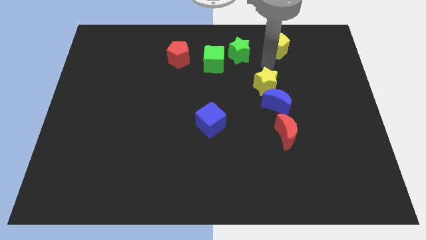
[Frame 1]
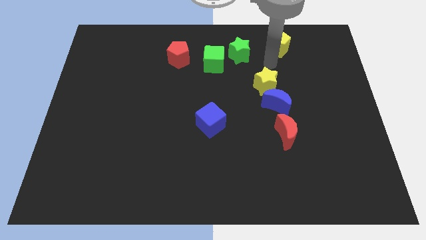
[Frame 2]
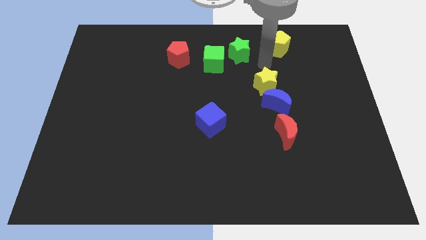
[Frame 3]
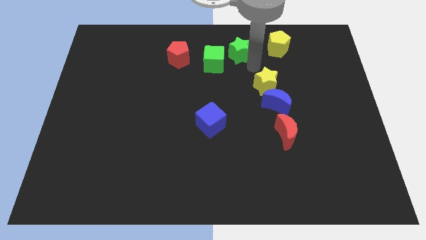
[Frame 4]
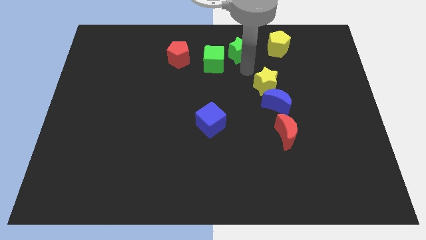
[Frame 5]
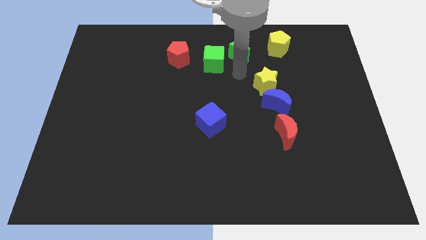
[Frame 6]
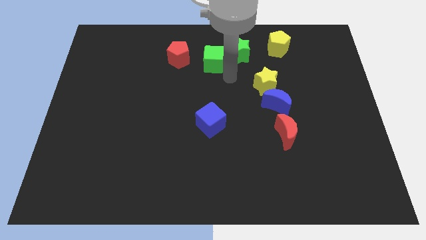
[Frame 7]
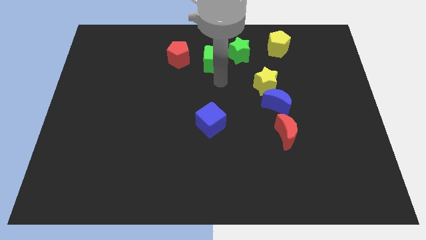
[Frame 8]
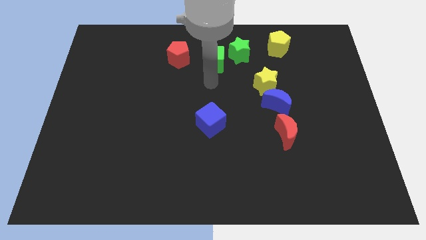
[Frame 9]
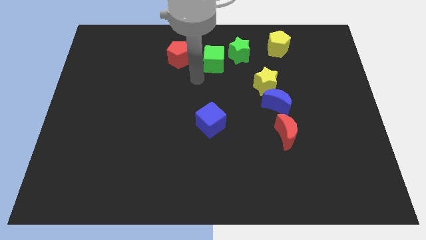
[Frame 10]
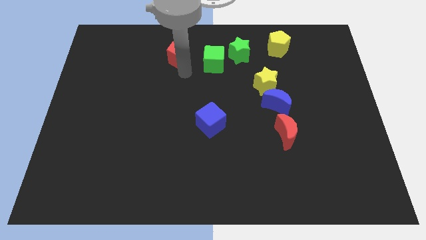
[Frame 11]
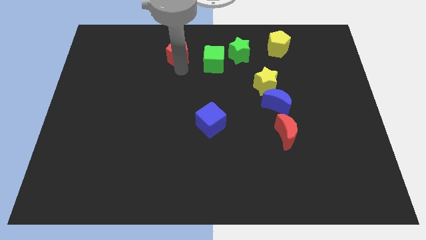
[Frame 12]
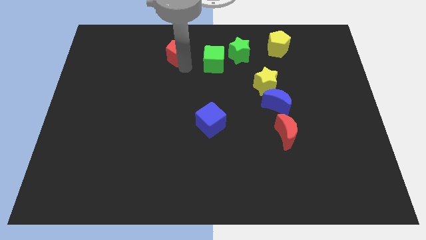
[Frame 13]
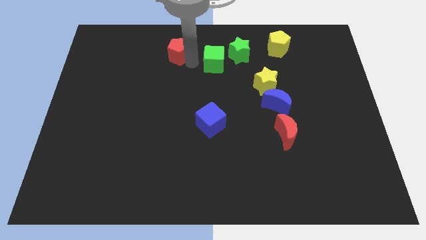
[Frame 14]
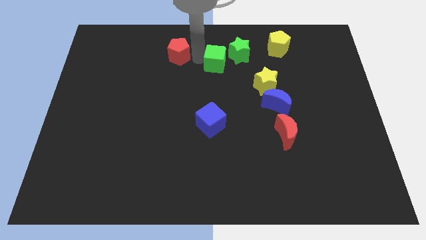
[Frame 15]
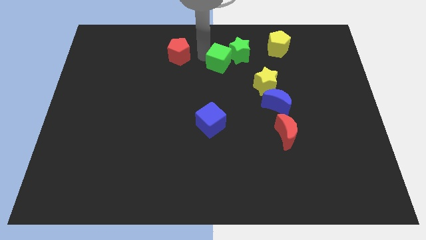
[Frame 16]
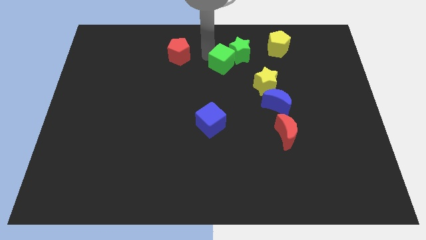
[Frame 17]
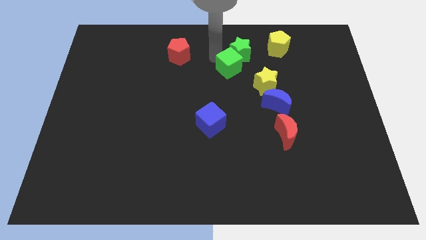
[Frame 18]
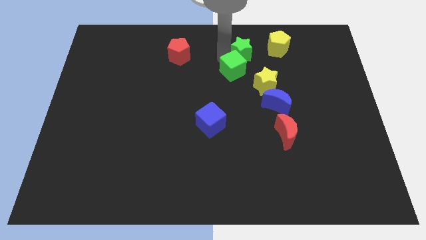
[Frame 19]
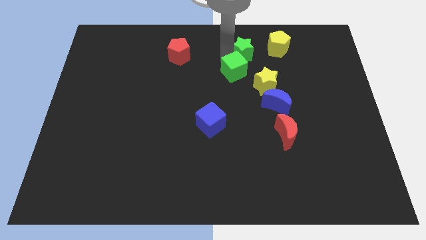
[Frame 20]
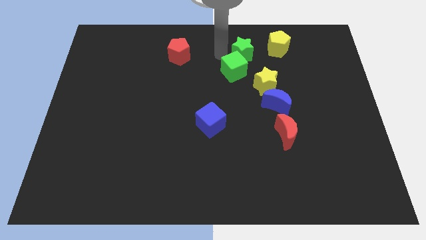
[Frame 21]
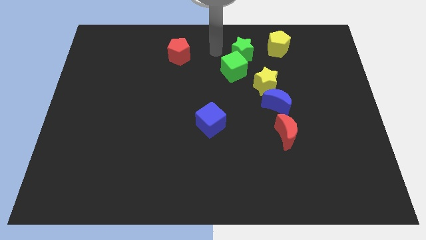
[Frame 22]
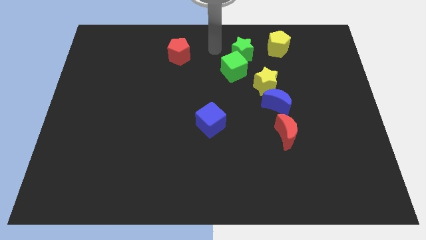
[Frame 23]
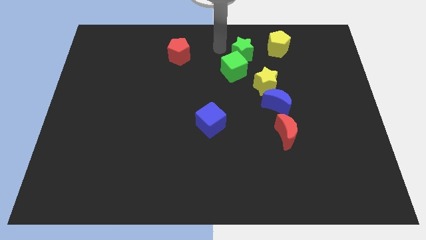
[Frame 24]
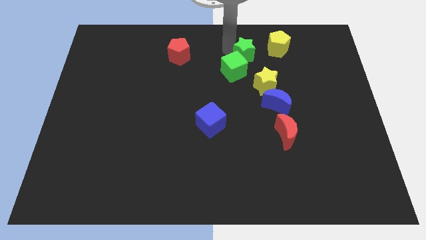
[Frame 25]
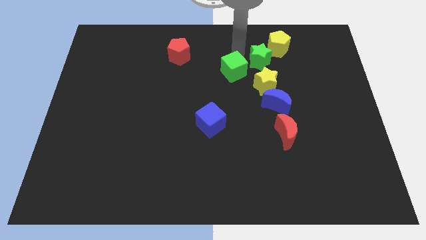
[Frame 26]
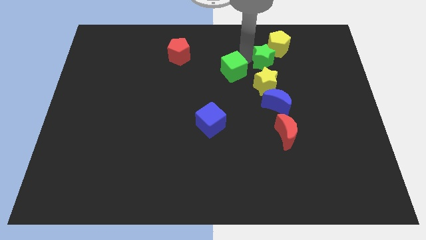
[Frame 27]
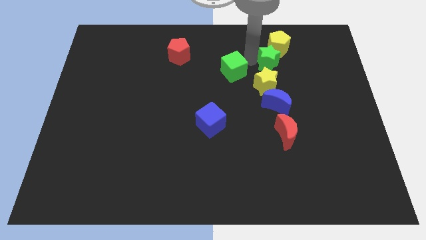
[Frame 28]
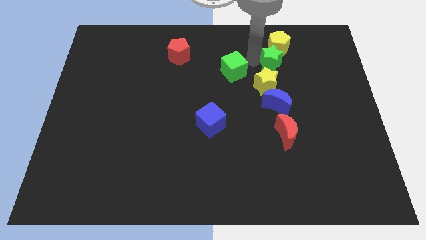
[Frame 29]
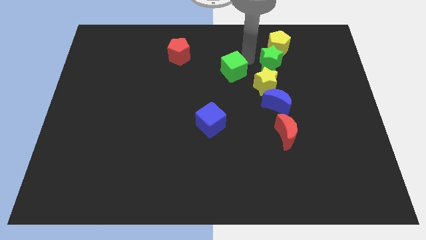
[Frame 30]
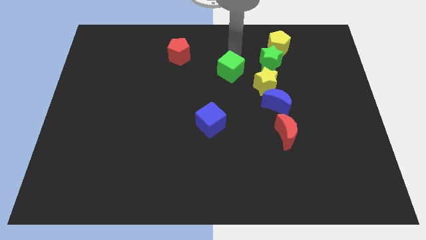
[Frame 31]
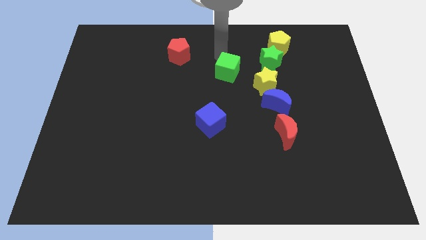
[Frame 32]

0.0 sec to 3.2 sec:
place the green star below the yellow pentagon

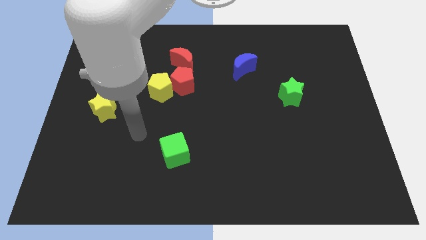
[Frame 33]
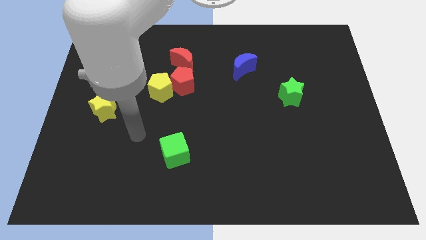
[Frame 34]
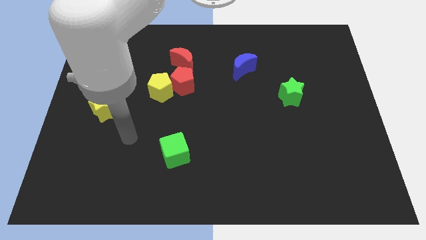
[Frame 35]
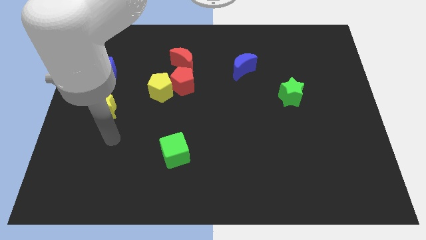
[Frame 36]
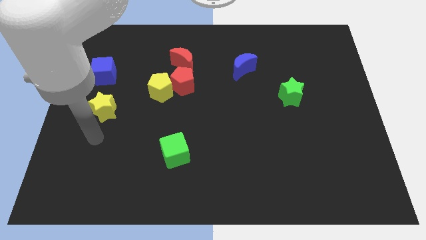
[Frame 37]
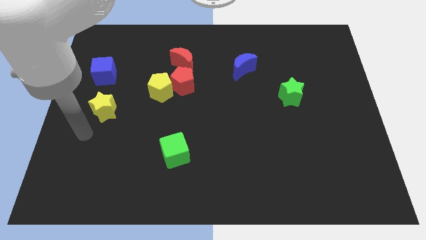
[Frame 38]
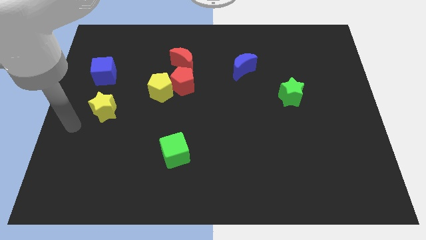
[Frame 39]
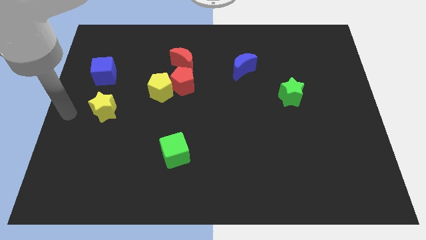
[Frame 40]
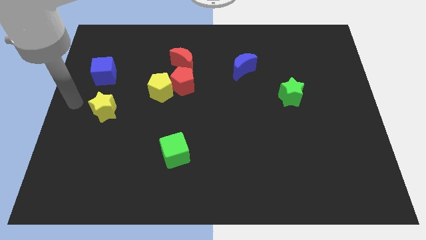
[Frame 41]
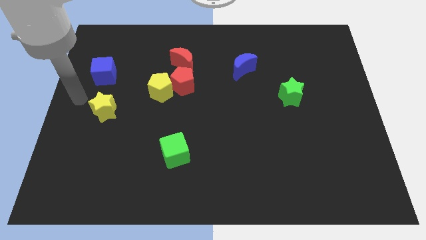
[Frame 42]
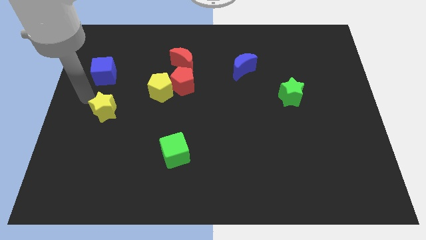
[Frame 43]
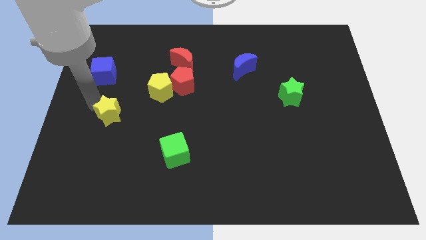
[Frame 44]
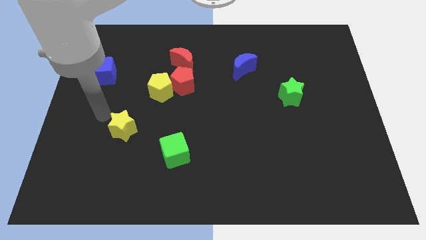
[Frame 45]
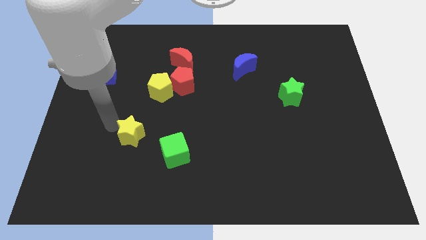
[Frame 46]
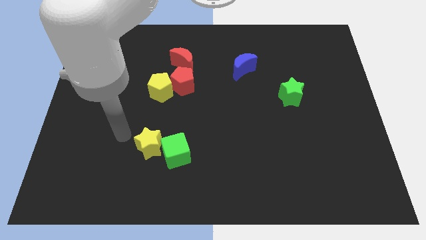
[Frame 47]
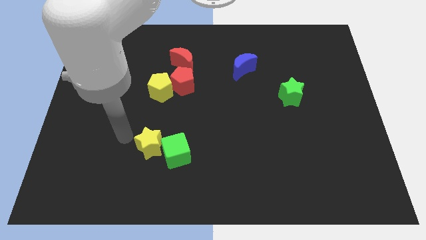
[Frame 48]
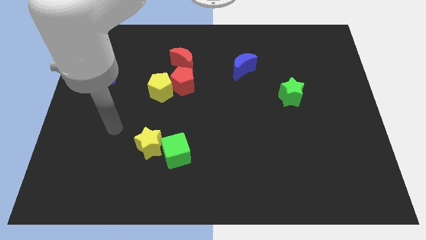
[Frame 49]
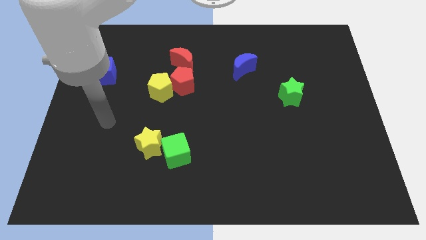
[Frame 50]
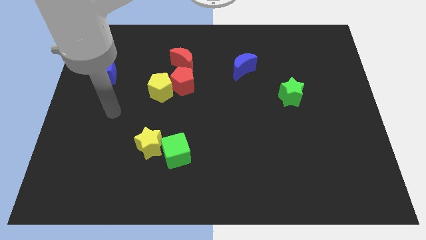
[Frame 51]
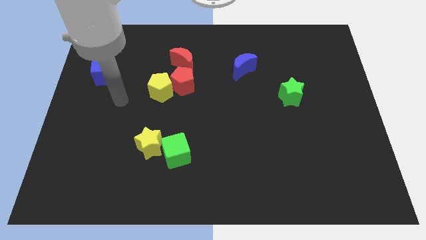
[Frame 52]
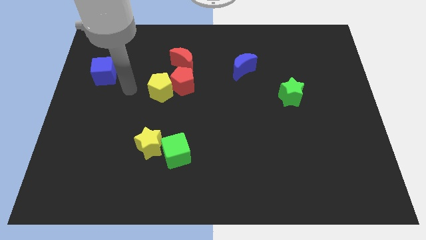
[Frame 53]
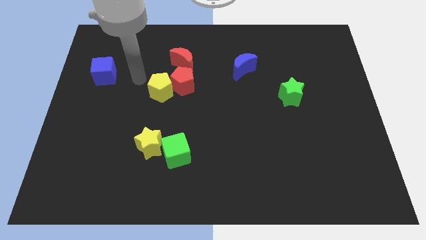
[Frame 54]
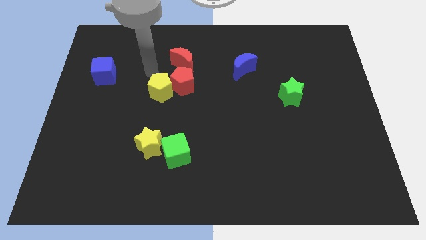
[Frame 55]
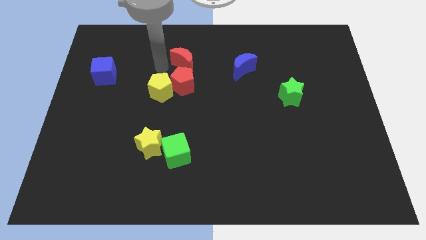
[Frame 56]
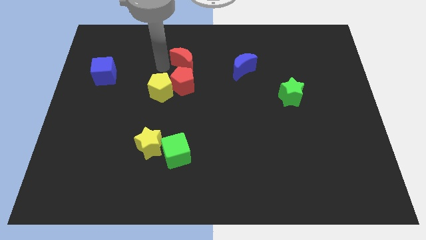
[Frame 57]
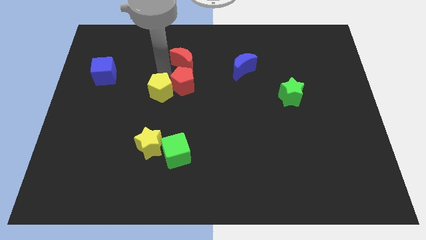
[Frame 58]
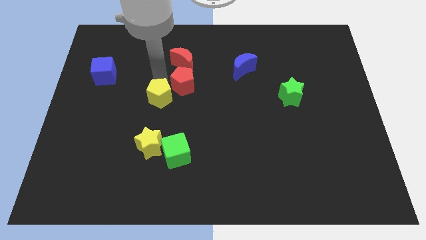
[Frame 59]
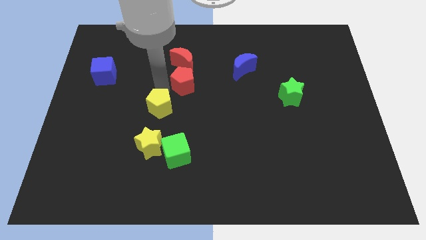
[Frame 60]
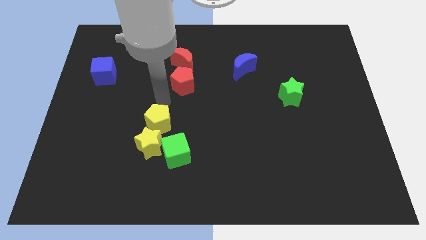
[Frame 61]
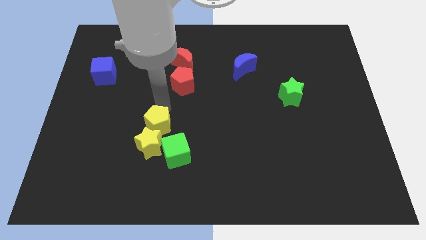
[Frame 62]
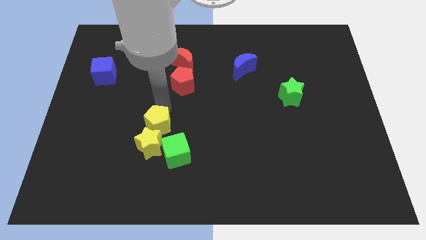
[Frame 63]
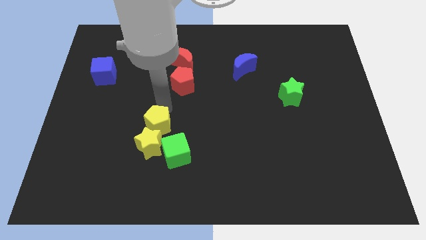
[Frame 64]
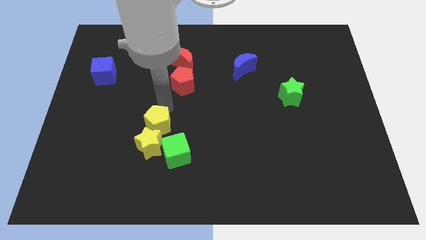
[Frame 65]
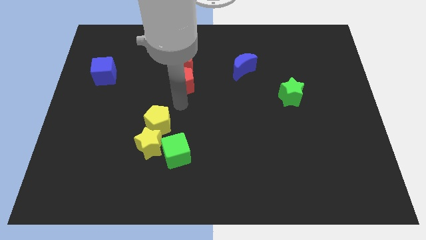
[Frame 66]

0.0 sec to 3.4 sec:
push yellow pentagon towards yellow star

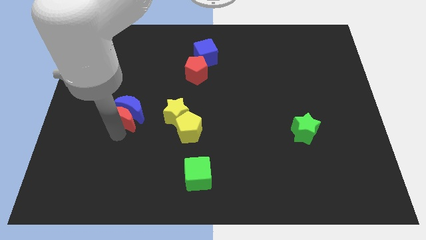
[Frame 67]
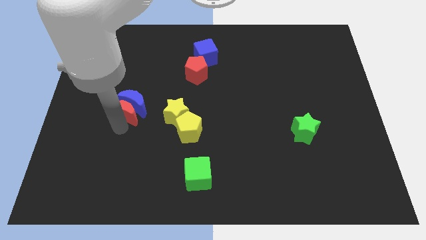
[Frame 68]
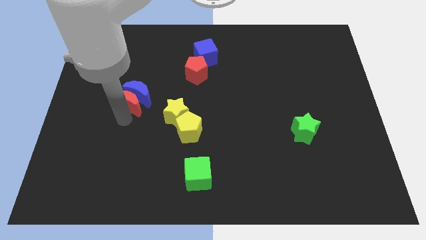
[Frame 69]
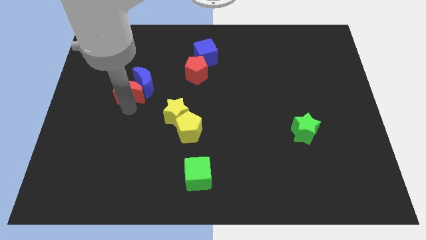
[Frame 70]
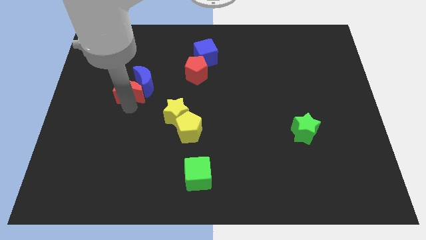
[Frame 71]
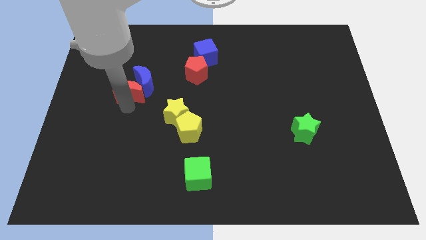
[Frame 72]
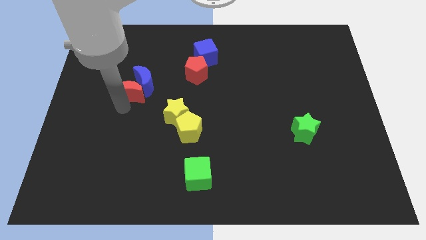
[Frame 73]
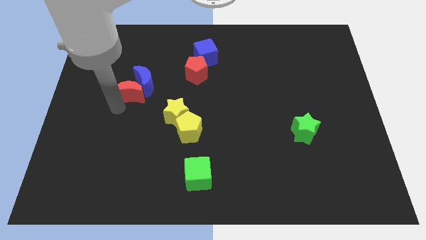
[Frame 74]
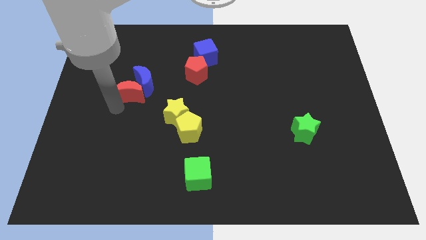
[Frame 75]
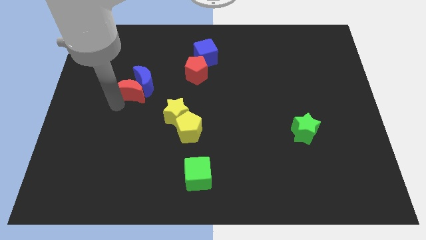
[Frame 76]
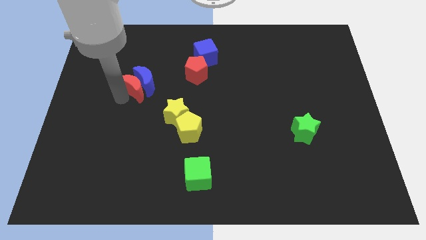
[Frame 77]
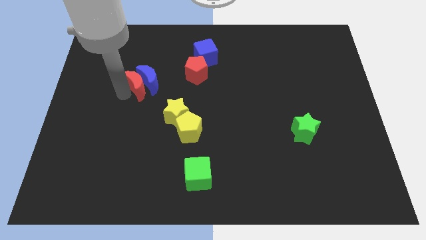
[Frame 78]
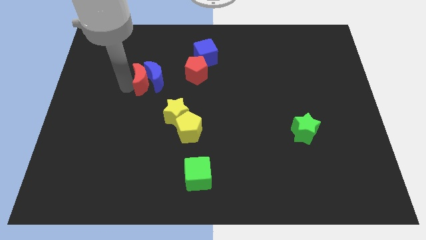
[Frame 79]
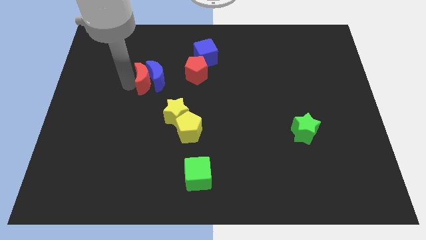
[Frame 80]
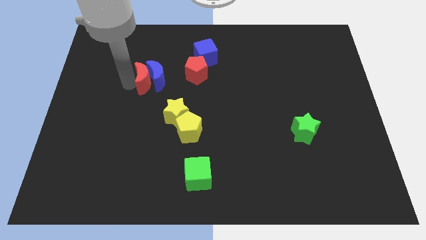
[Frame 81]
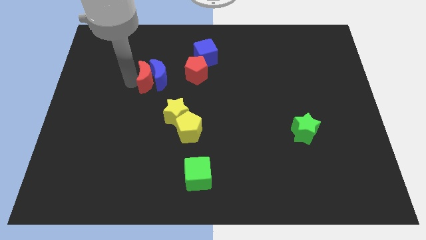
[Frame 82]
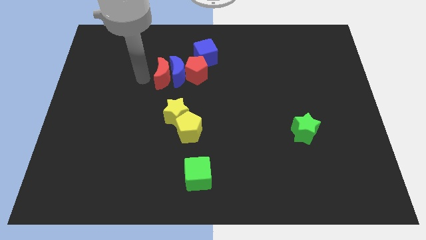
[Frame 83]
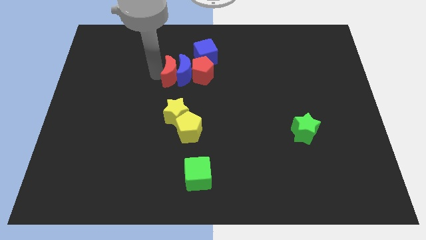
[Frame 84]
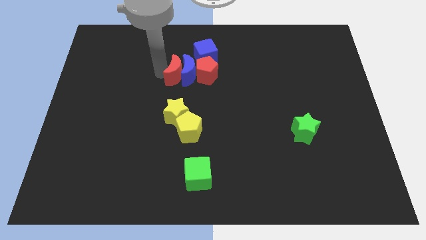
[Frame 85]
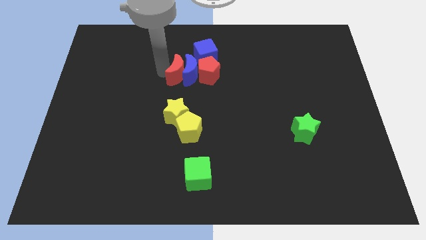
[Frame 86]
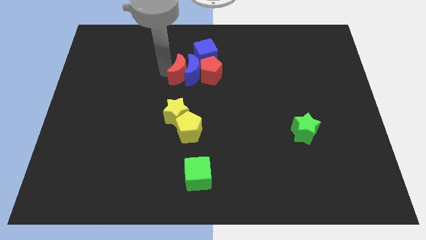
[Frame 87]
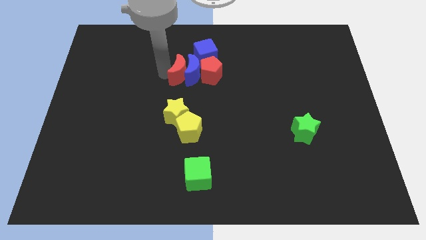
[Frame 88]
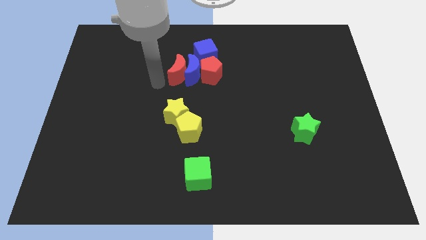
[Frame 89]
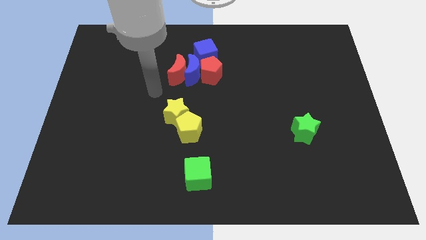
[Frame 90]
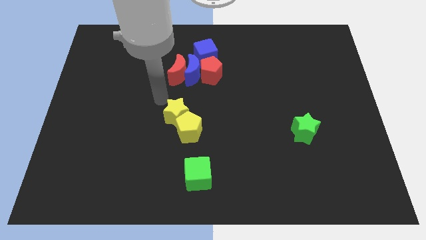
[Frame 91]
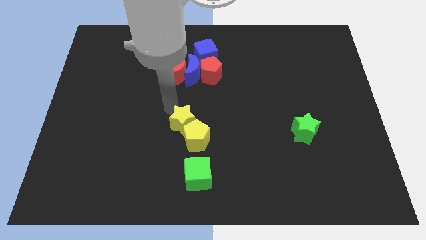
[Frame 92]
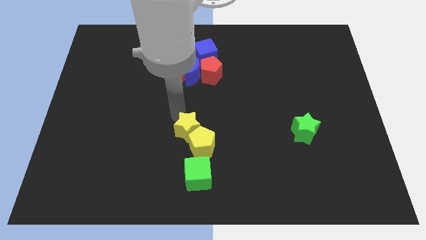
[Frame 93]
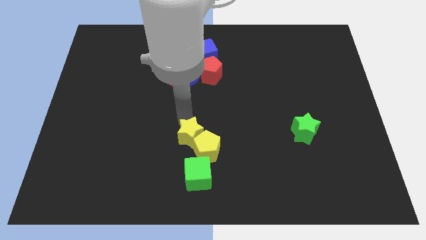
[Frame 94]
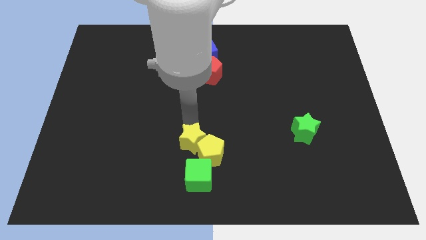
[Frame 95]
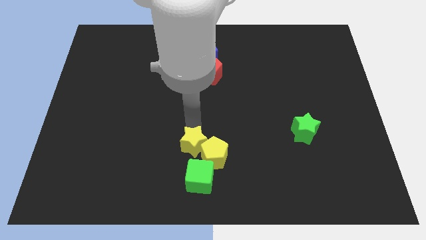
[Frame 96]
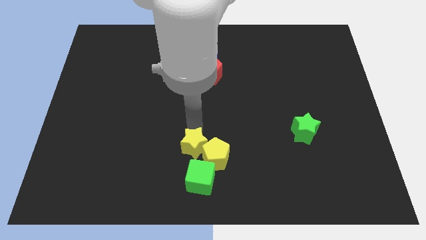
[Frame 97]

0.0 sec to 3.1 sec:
move the red crescent to the left of the red pentagon along with the blue crescent
